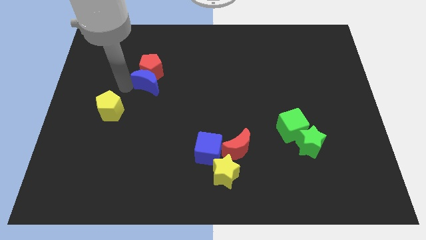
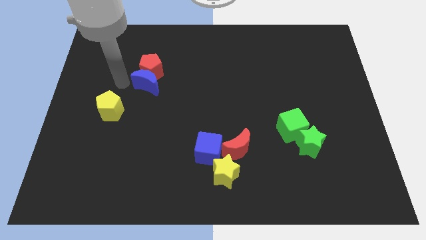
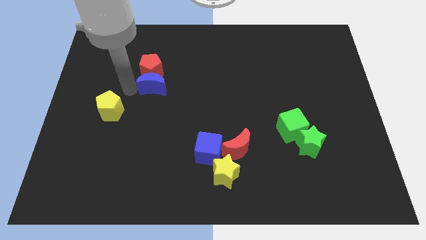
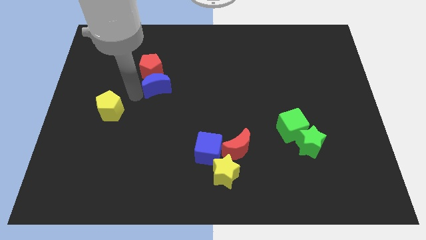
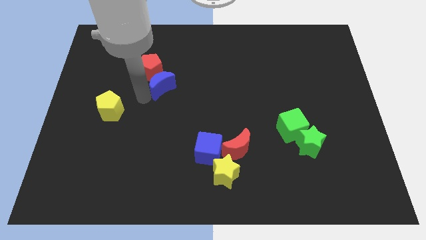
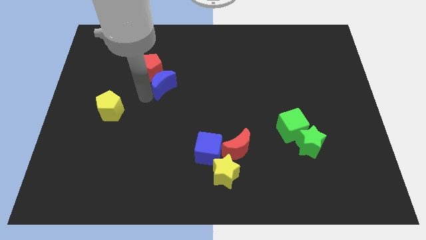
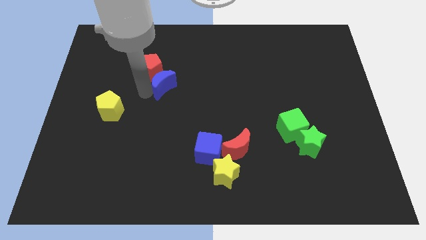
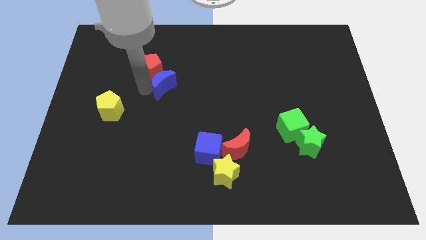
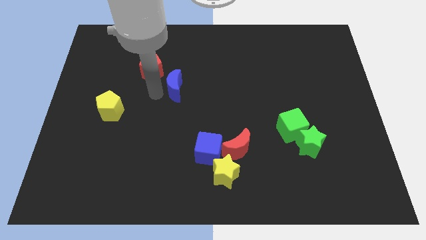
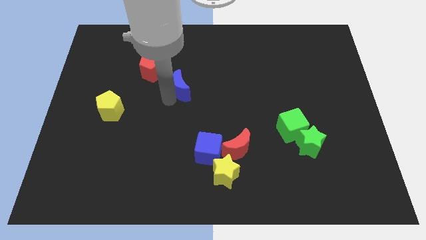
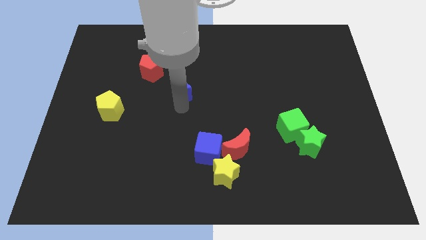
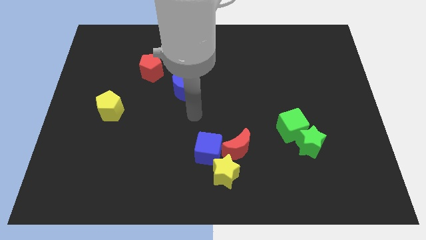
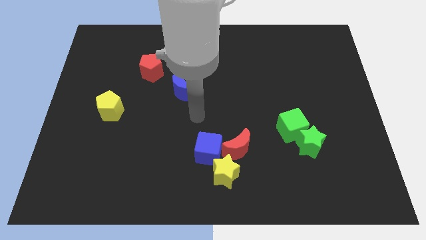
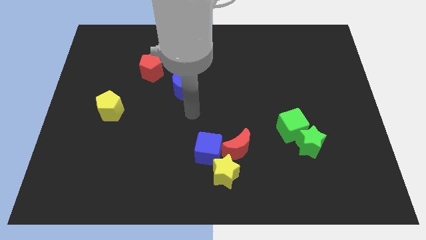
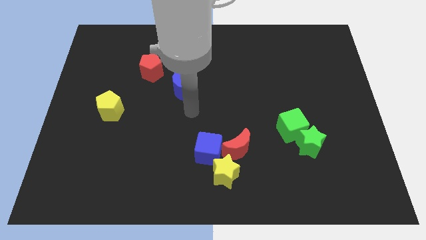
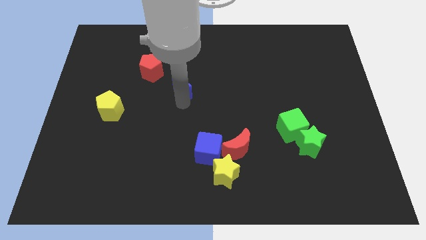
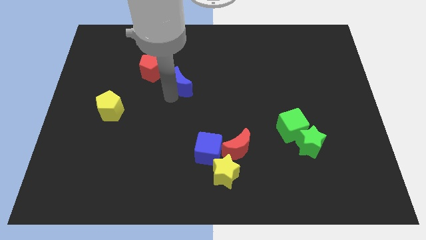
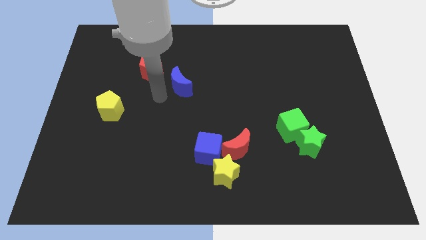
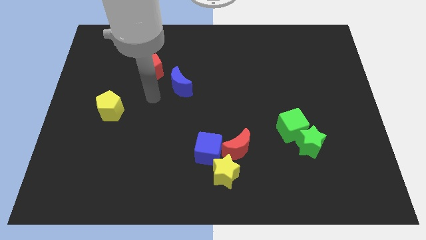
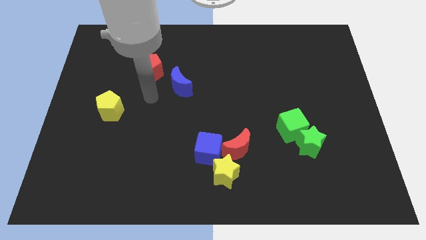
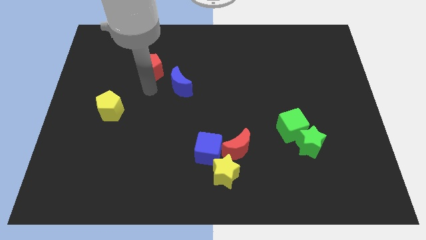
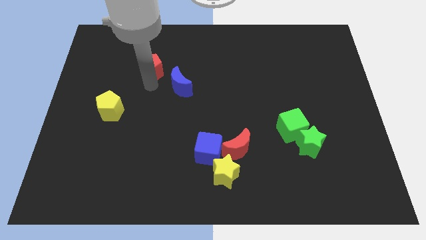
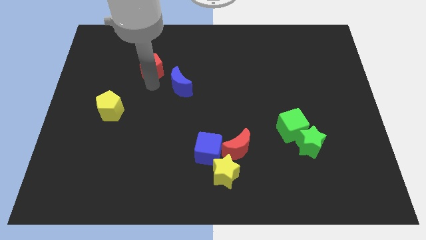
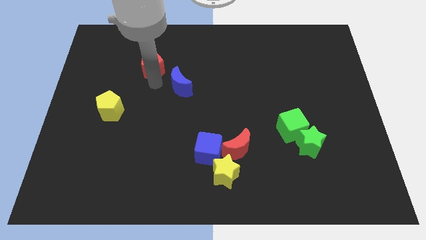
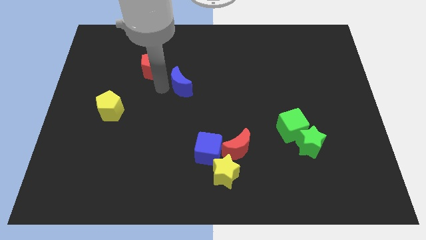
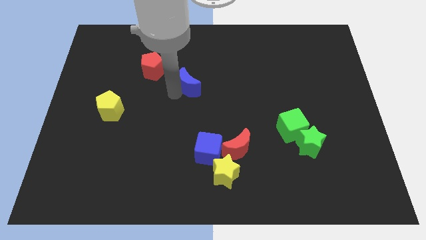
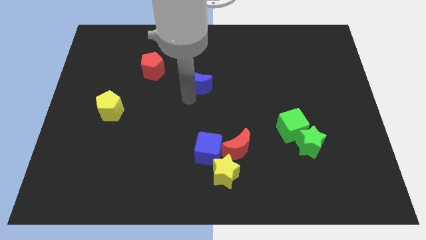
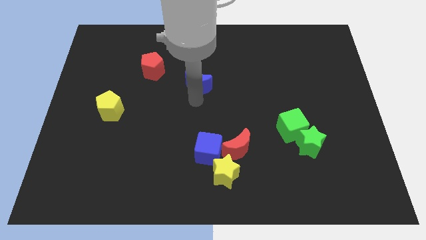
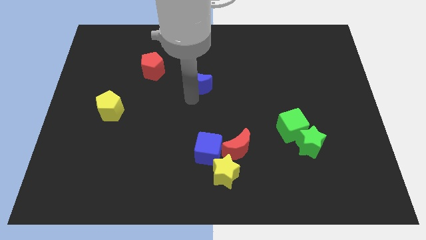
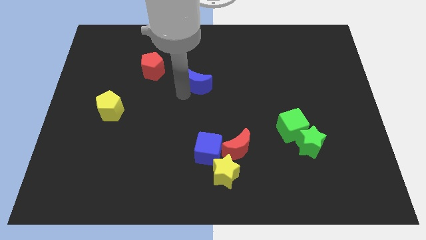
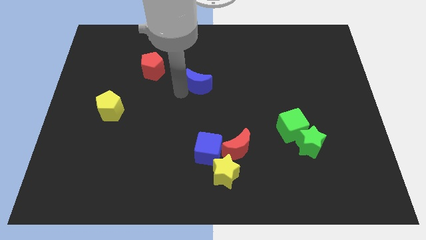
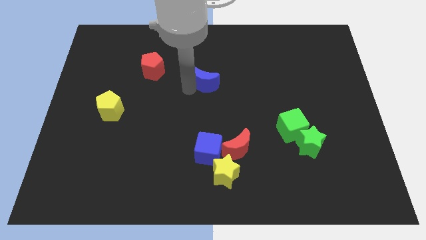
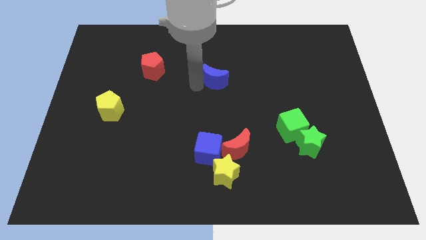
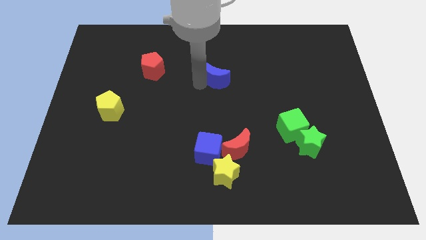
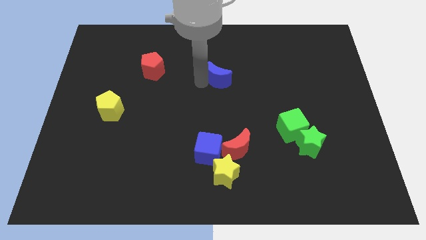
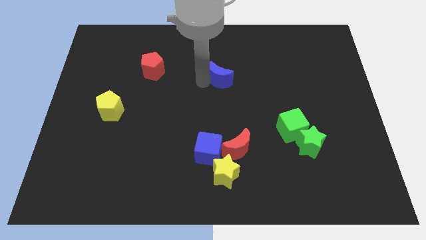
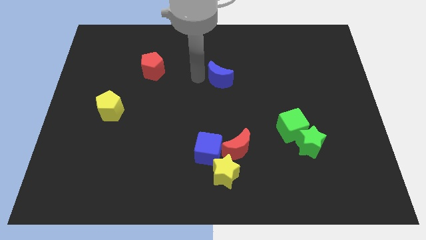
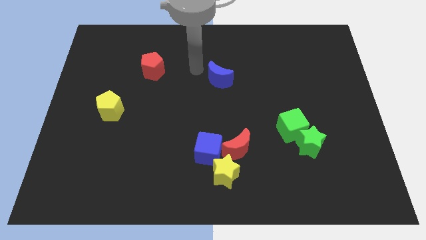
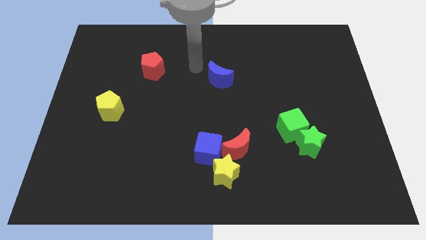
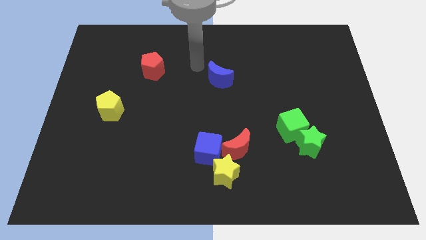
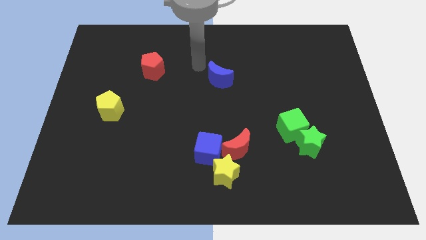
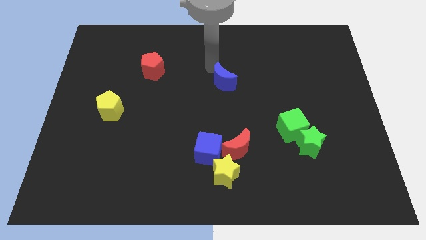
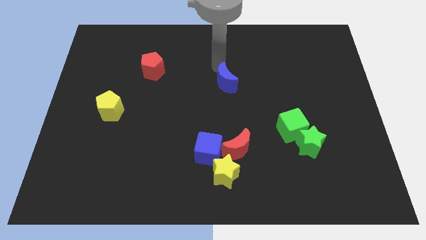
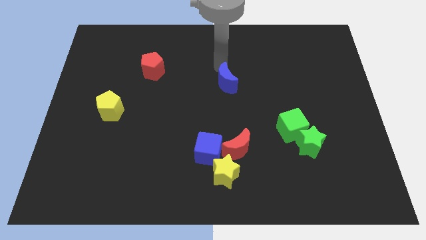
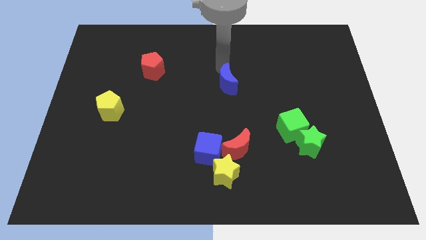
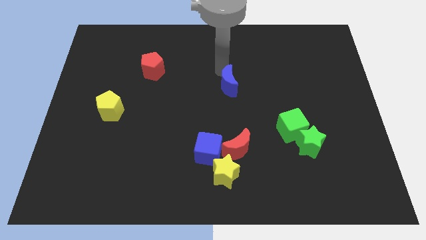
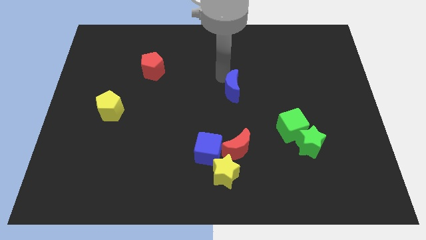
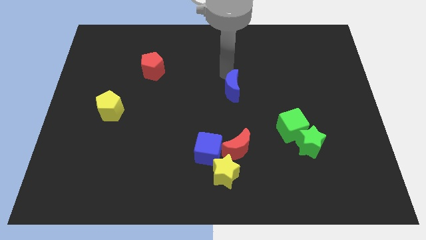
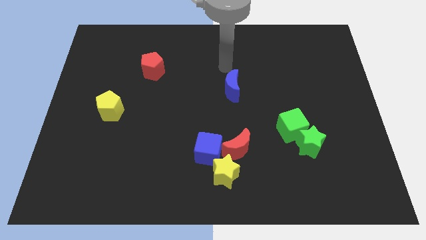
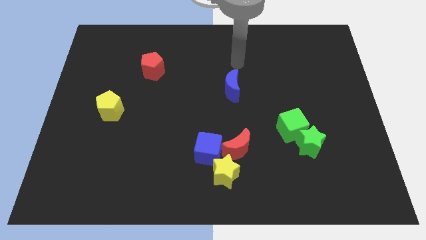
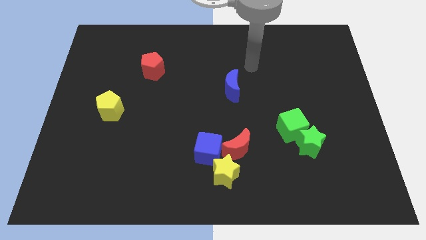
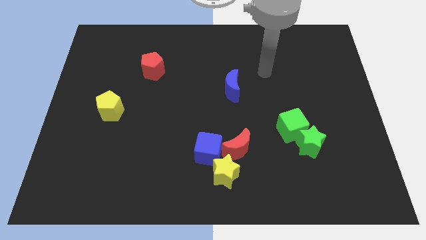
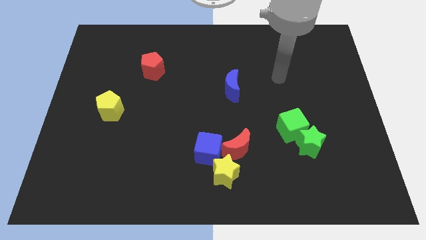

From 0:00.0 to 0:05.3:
place the blue crescent vertically above the top side of the red moon

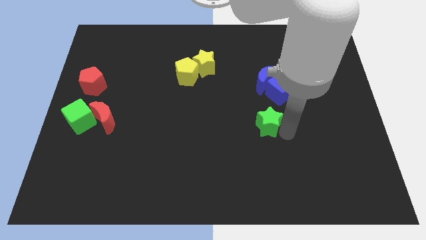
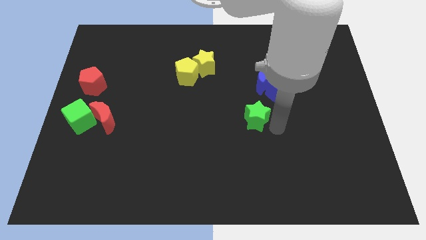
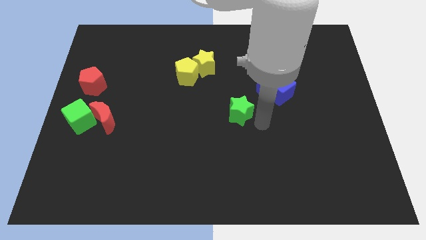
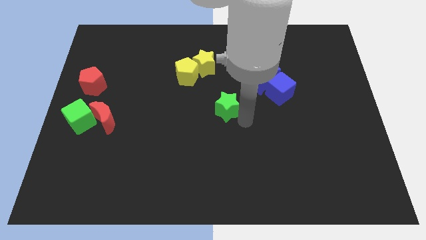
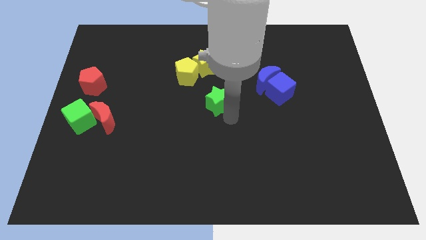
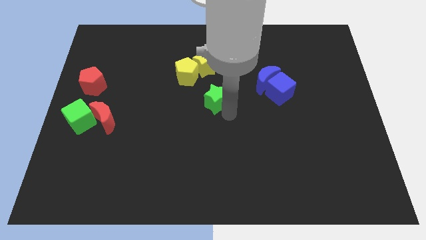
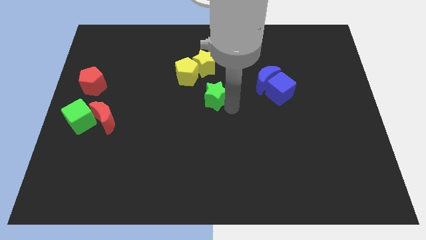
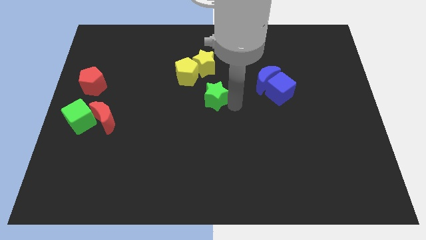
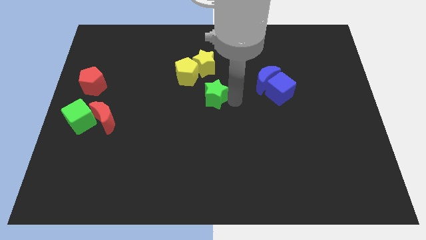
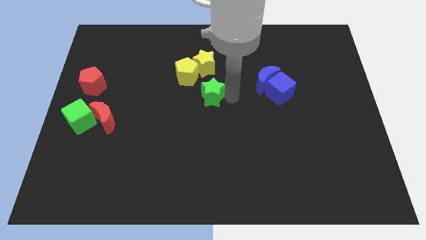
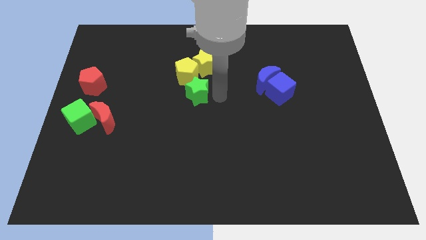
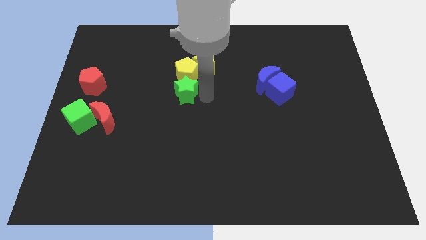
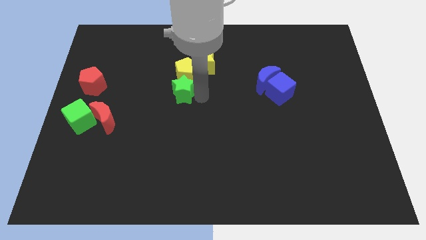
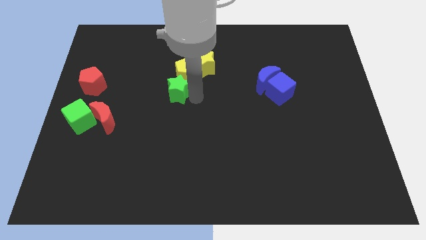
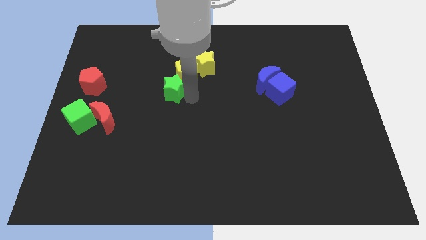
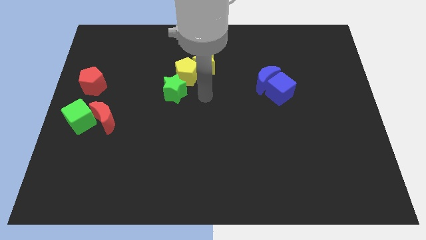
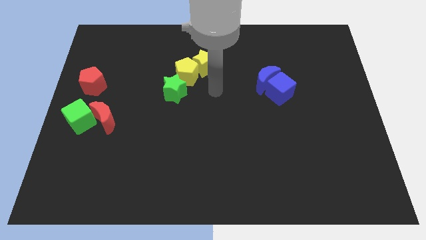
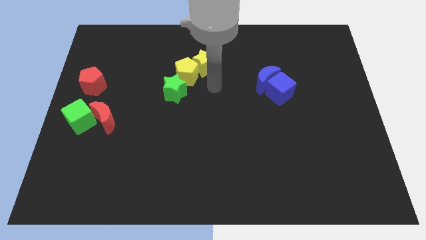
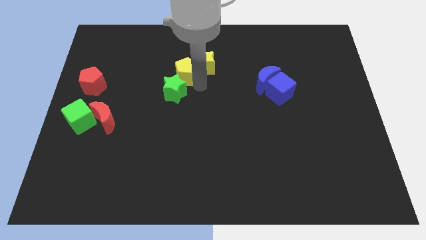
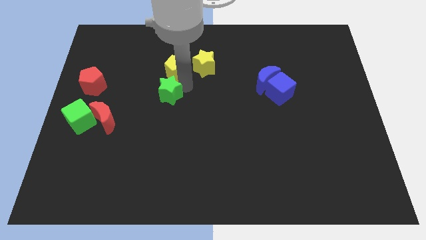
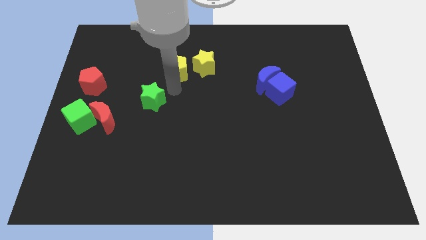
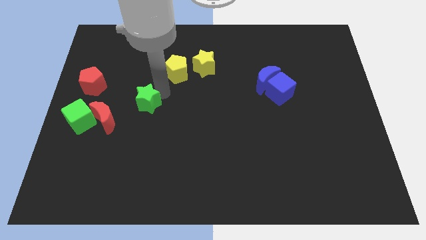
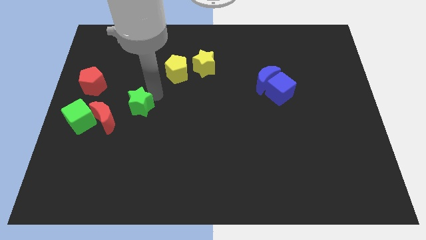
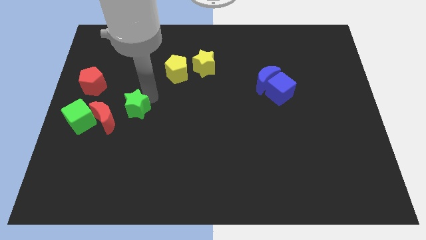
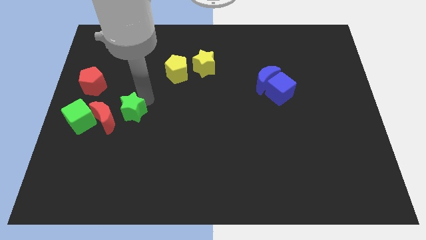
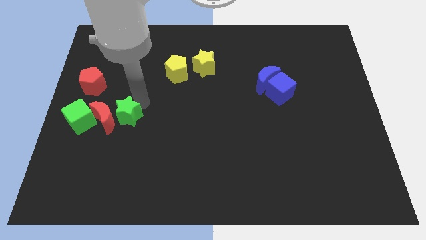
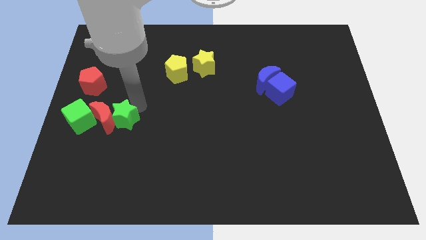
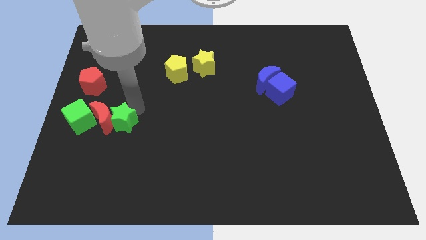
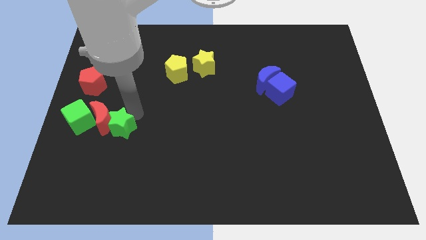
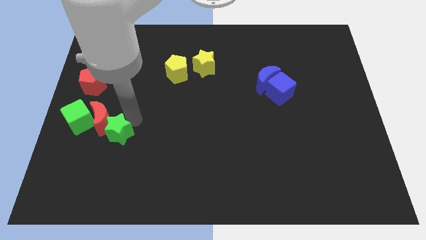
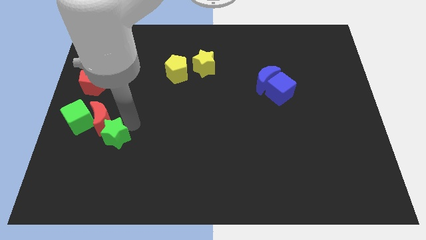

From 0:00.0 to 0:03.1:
move the green star into the red moon

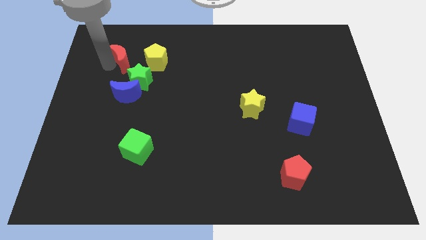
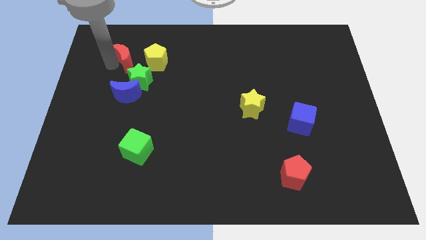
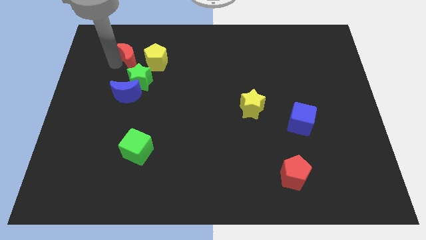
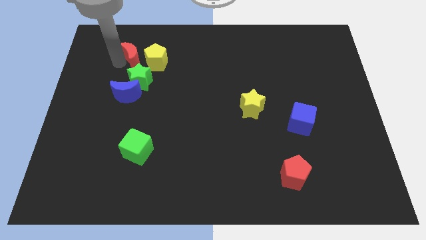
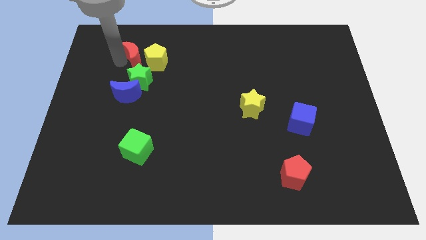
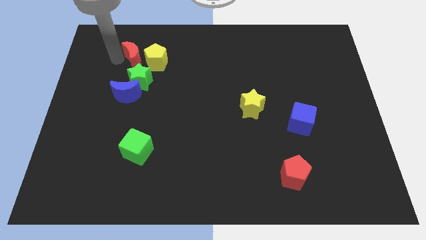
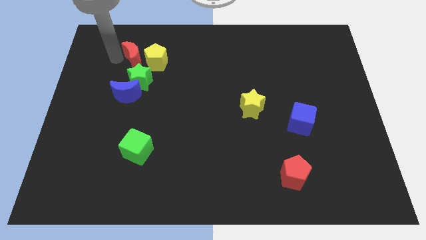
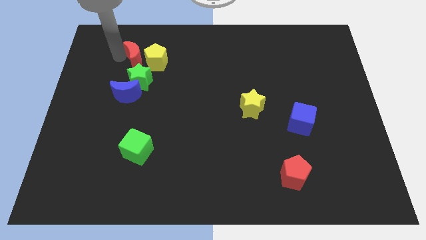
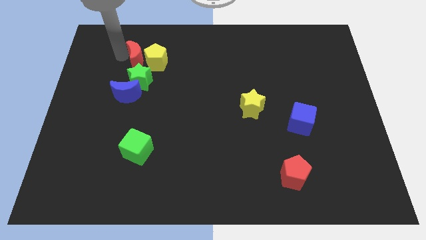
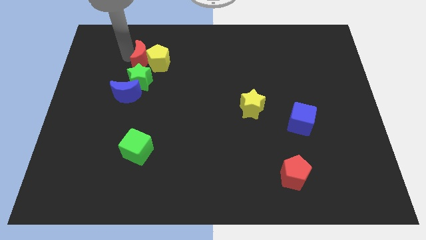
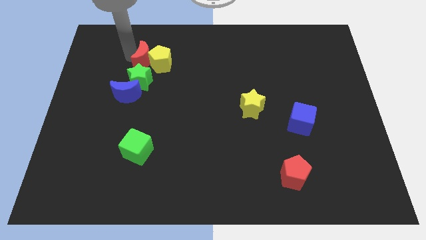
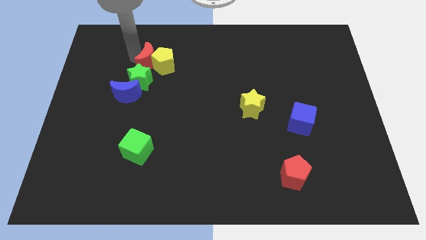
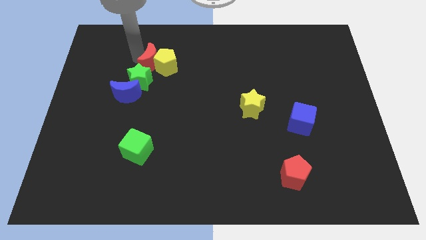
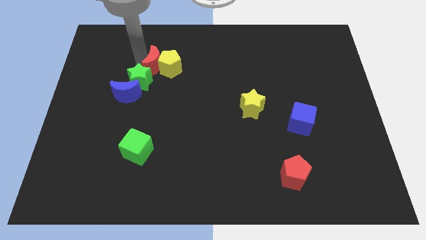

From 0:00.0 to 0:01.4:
push the red crescent into the yellow pentagon
